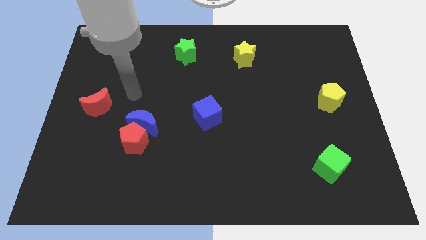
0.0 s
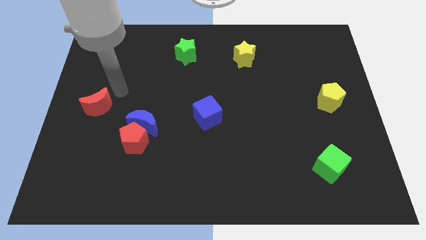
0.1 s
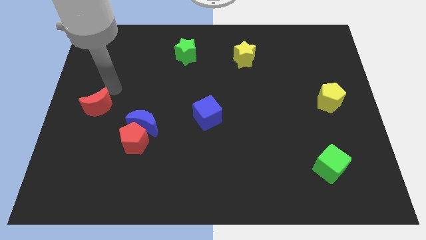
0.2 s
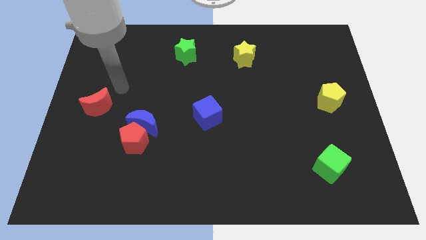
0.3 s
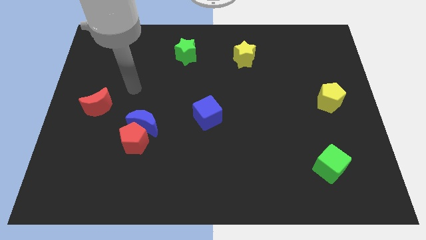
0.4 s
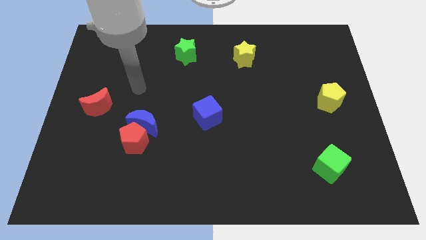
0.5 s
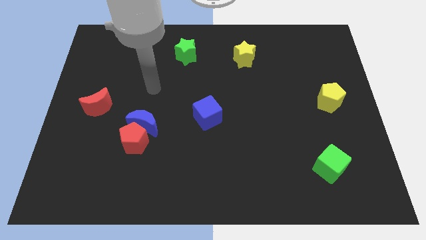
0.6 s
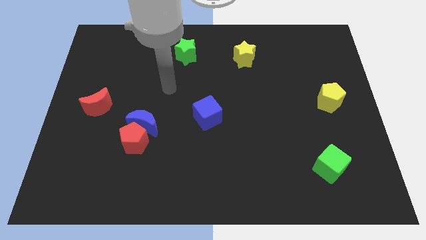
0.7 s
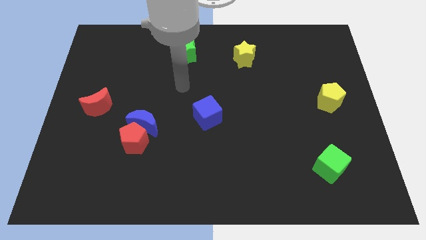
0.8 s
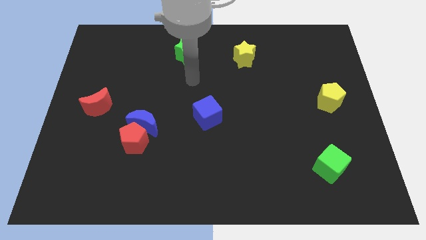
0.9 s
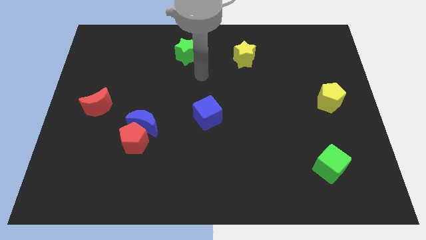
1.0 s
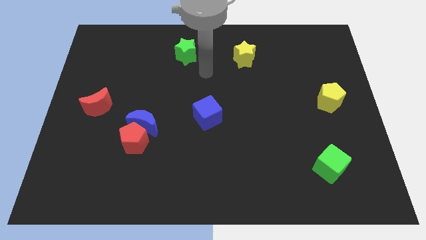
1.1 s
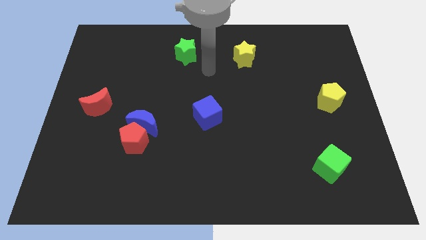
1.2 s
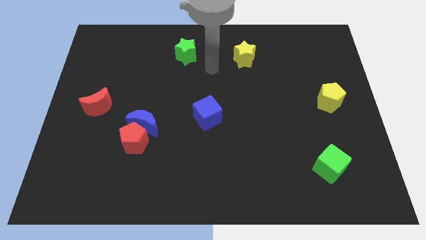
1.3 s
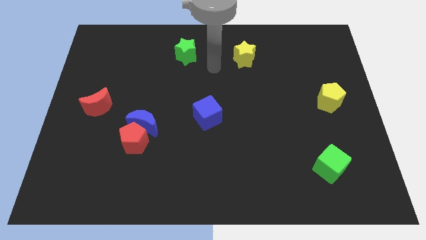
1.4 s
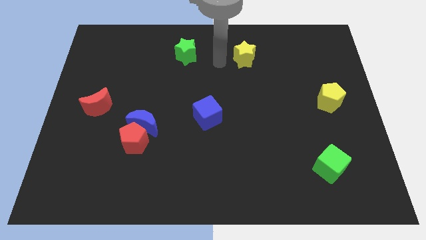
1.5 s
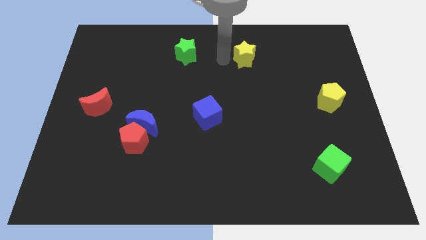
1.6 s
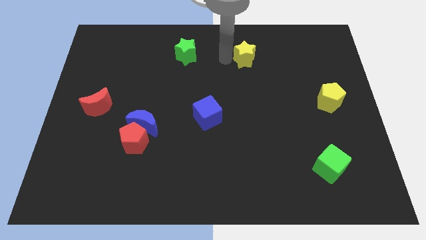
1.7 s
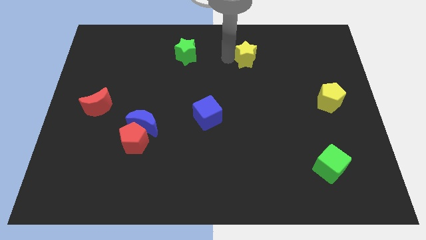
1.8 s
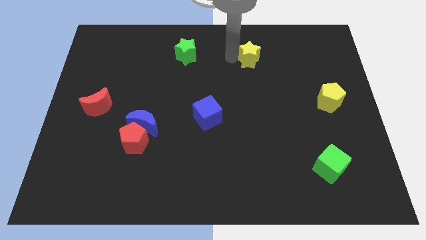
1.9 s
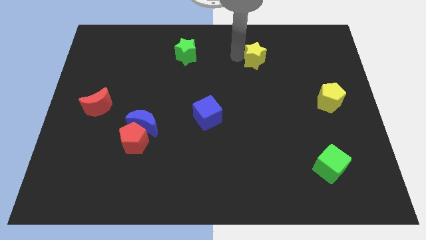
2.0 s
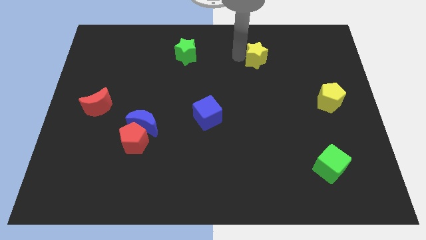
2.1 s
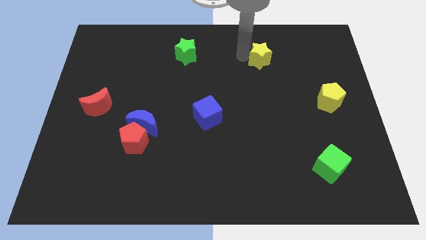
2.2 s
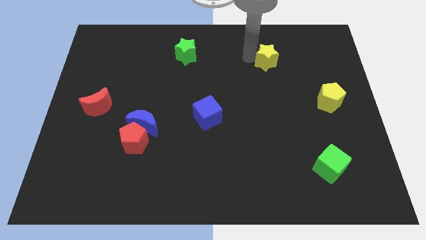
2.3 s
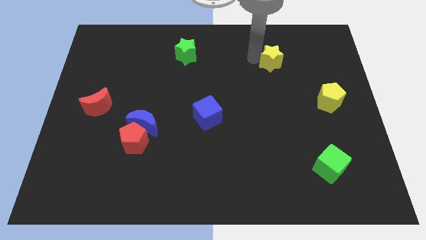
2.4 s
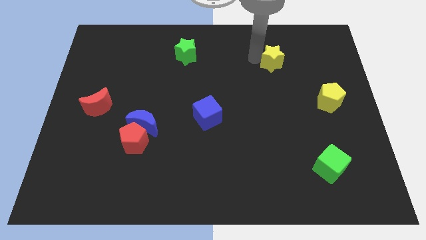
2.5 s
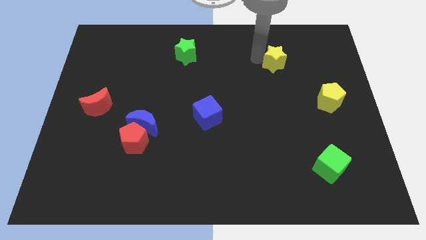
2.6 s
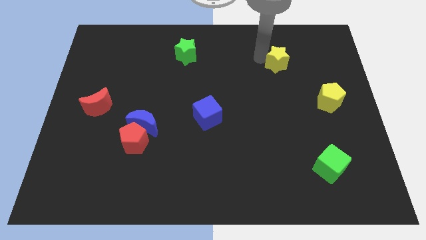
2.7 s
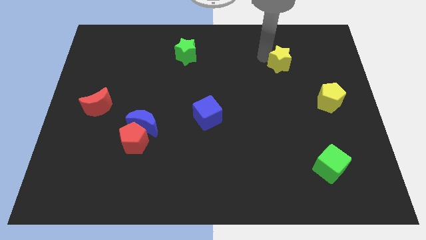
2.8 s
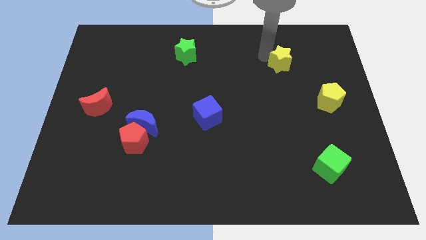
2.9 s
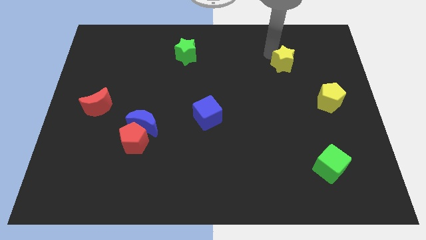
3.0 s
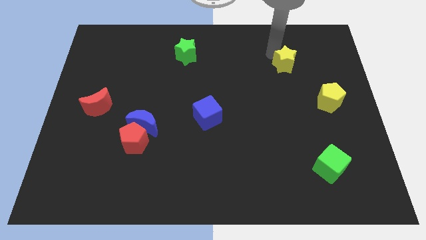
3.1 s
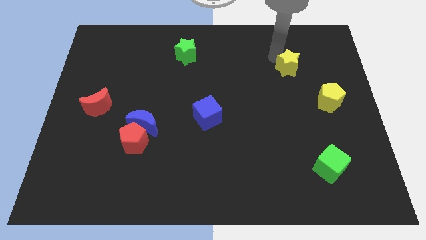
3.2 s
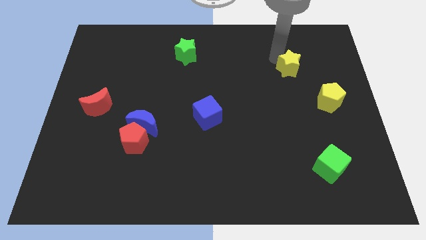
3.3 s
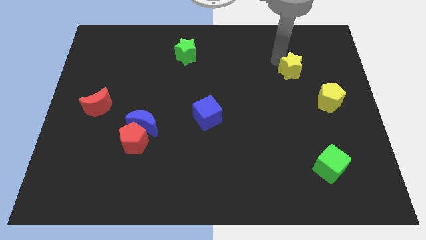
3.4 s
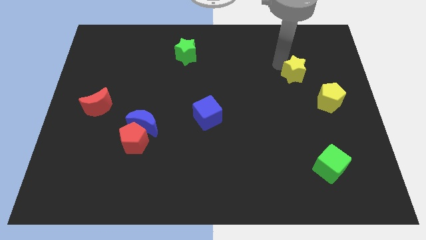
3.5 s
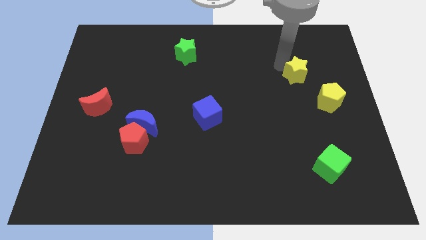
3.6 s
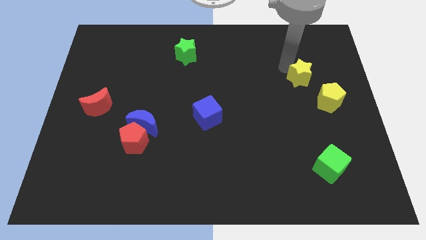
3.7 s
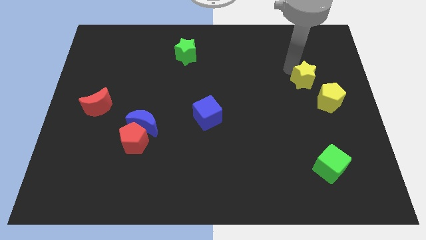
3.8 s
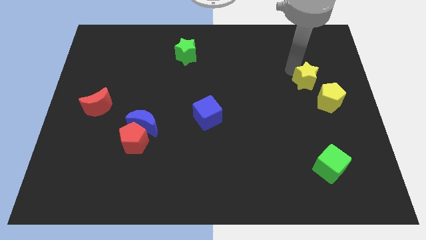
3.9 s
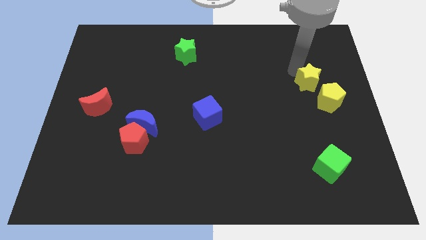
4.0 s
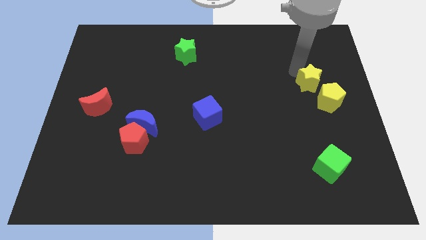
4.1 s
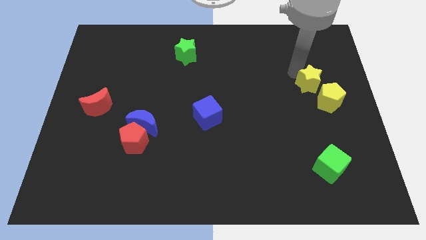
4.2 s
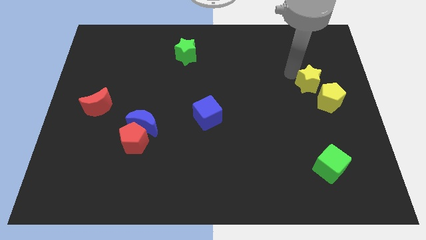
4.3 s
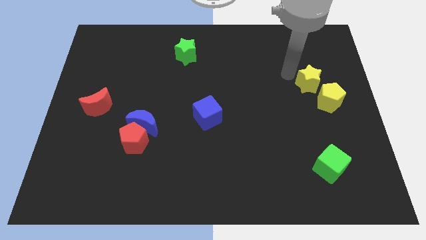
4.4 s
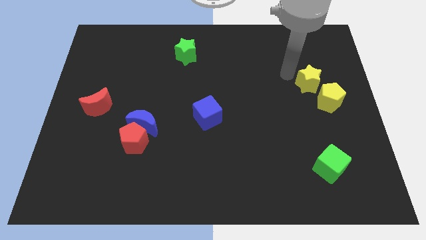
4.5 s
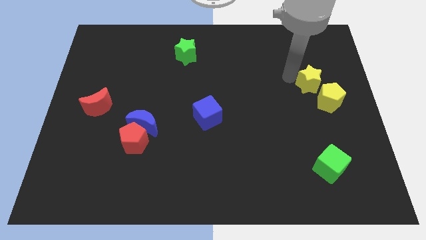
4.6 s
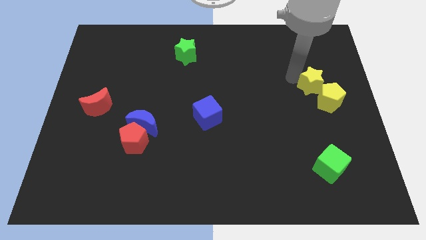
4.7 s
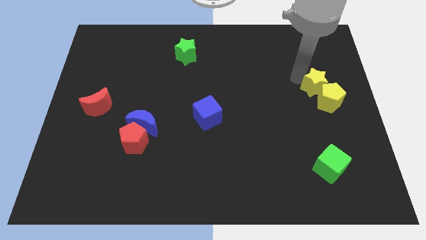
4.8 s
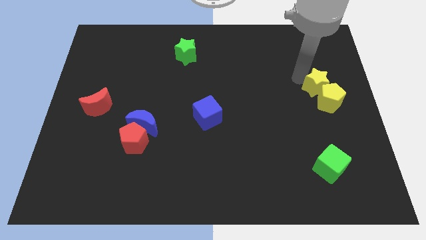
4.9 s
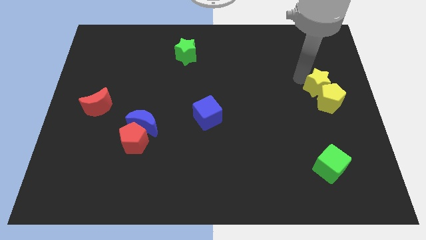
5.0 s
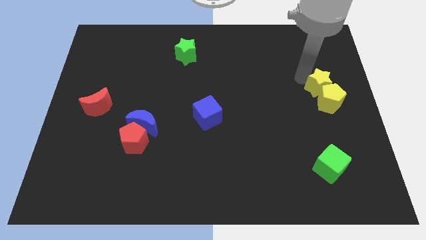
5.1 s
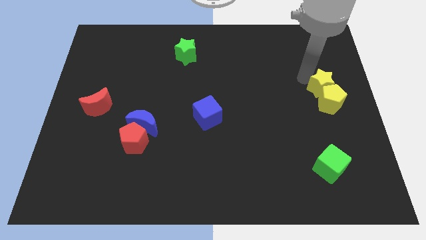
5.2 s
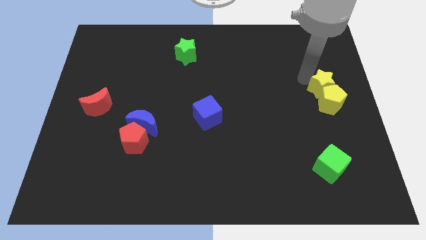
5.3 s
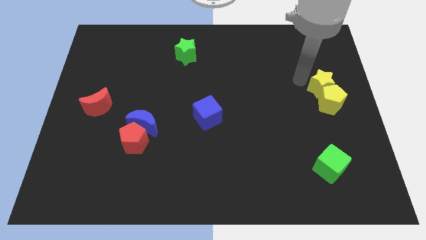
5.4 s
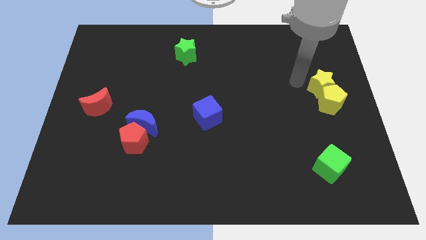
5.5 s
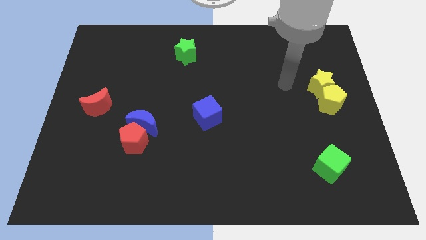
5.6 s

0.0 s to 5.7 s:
push the yellow star into the yellow pentagon

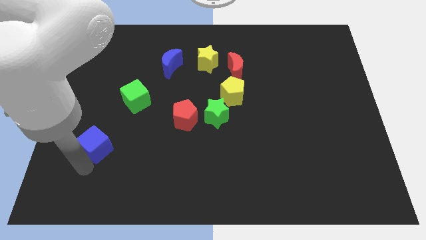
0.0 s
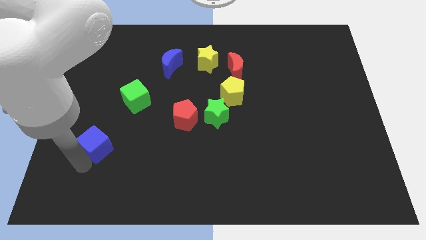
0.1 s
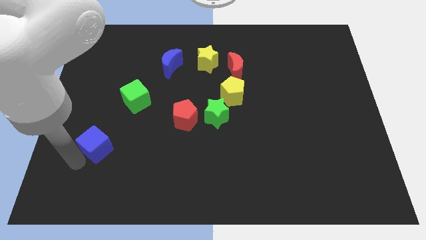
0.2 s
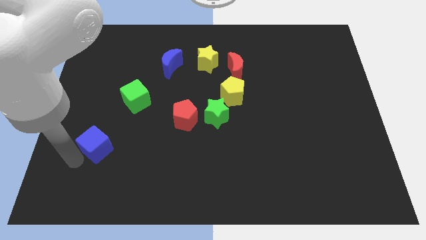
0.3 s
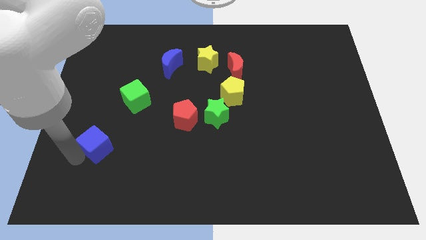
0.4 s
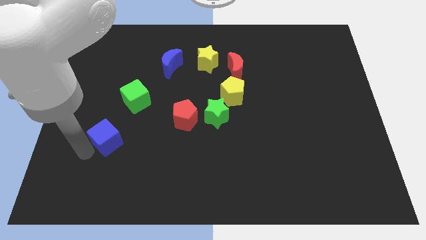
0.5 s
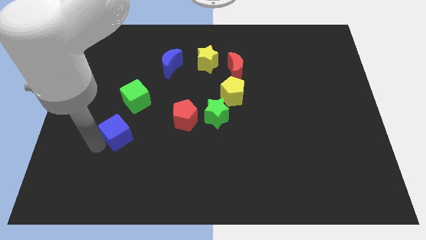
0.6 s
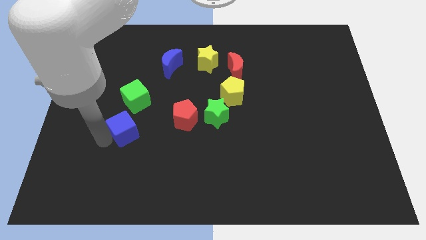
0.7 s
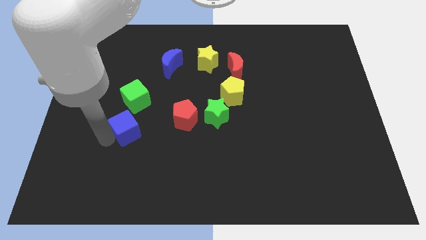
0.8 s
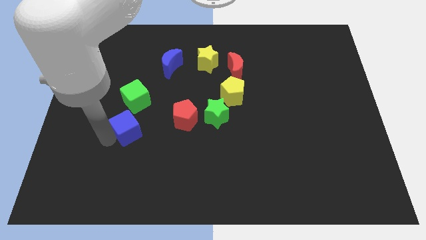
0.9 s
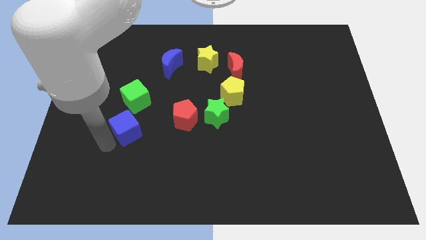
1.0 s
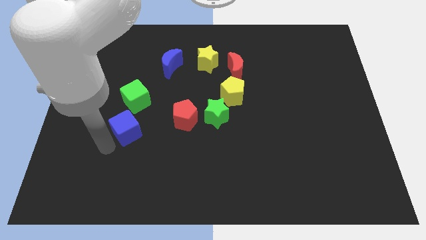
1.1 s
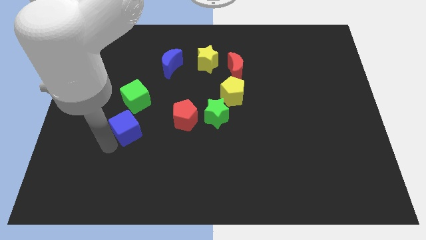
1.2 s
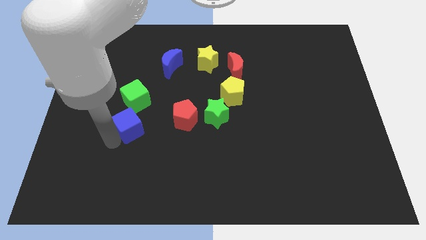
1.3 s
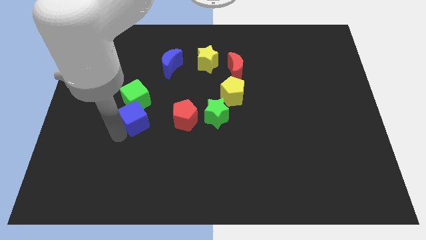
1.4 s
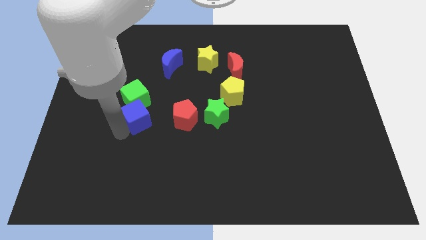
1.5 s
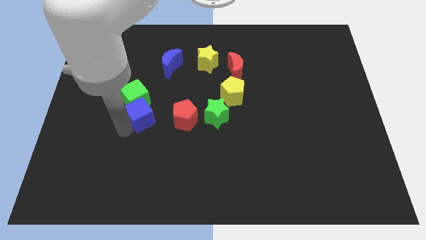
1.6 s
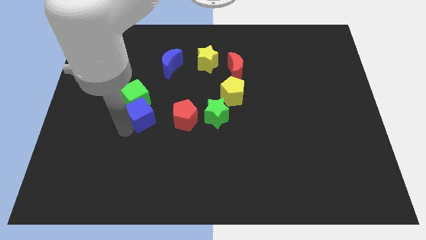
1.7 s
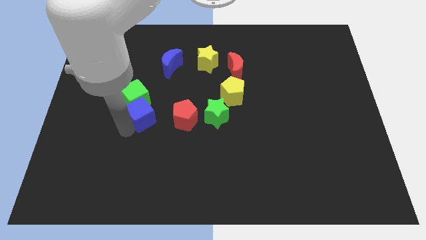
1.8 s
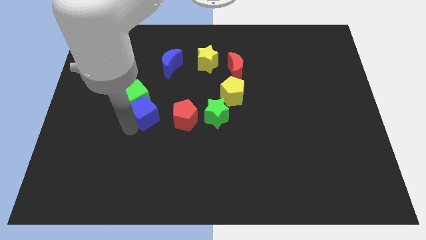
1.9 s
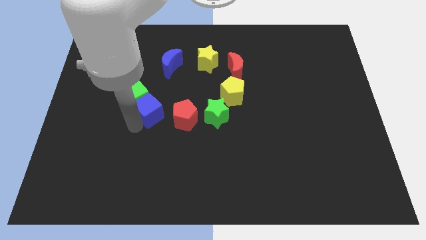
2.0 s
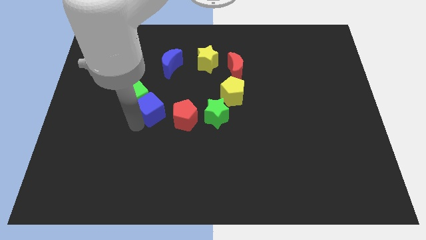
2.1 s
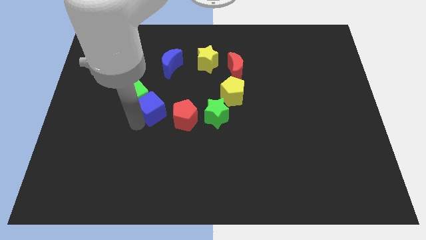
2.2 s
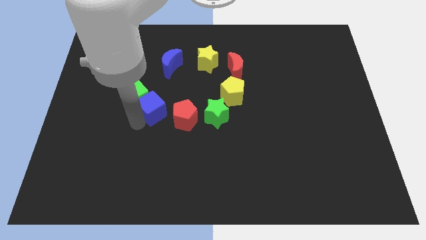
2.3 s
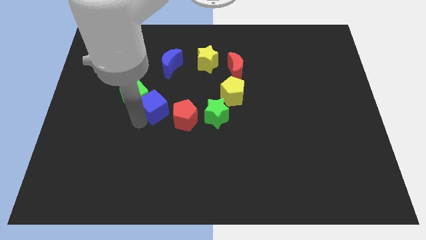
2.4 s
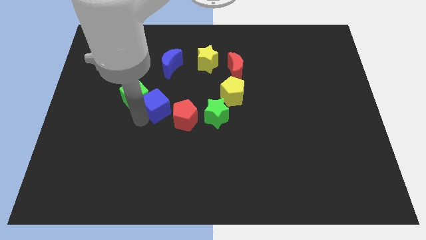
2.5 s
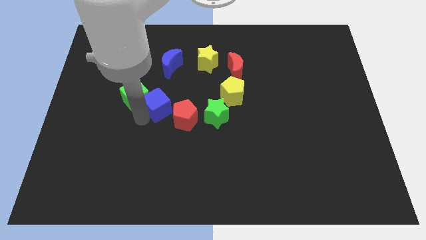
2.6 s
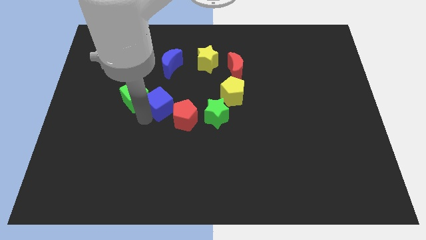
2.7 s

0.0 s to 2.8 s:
move the blue cube left beside the red pentagon

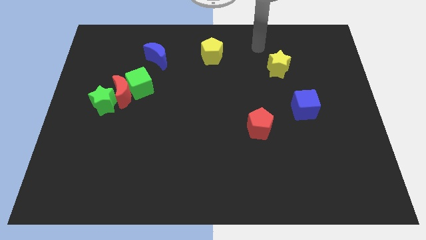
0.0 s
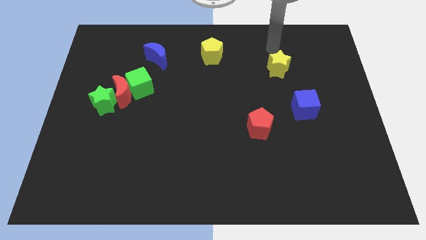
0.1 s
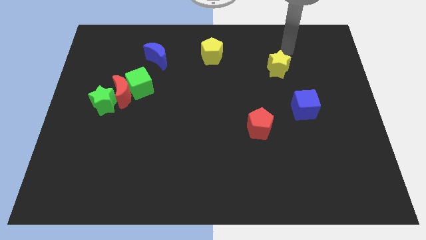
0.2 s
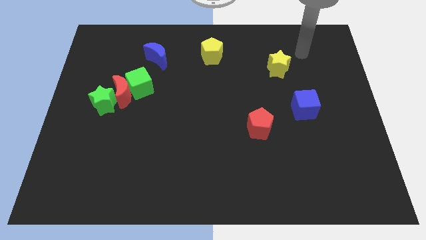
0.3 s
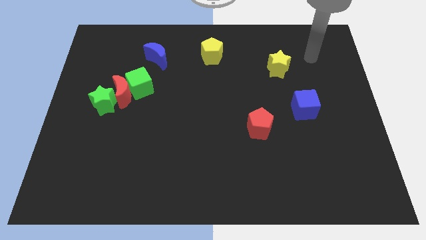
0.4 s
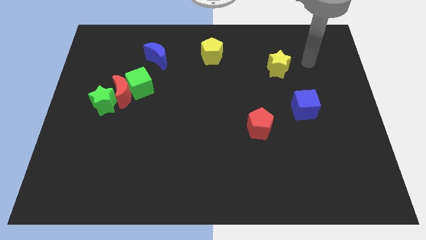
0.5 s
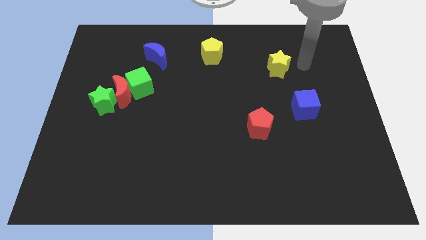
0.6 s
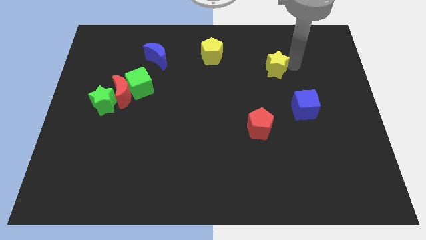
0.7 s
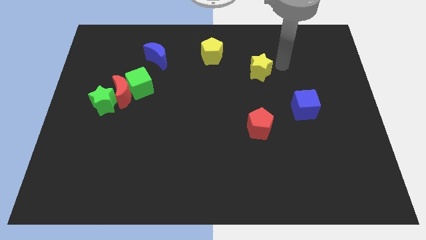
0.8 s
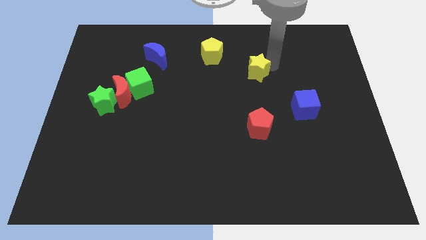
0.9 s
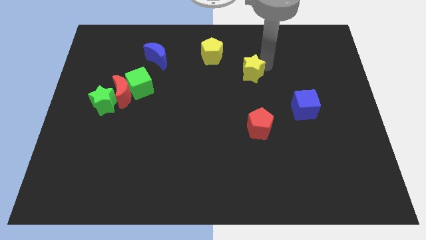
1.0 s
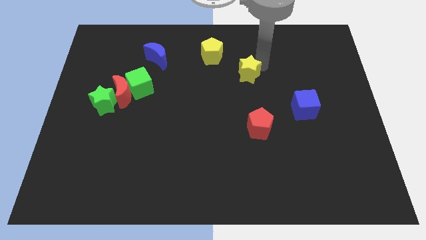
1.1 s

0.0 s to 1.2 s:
push the yellow star slightly towards left
